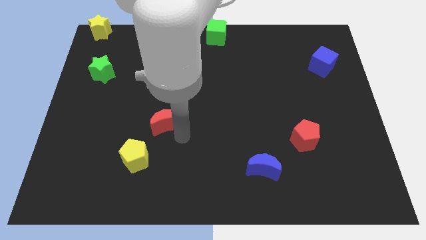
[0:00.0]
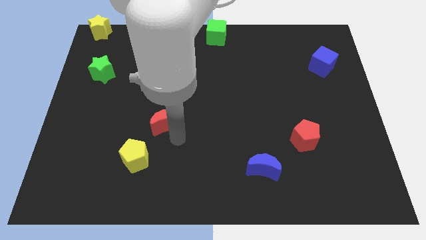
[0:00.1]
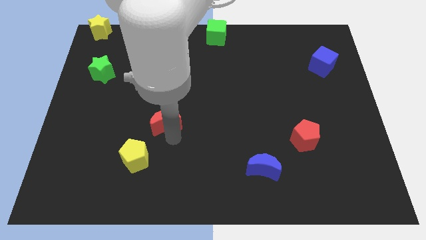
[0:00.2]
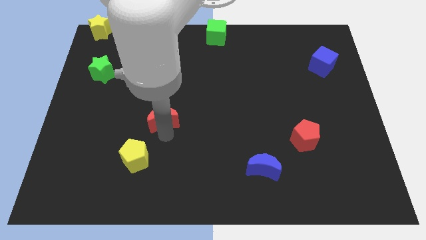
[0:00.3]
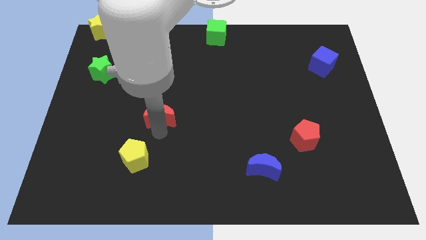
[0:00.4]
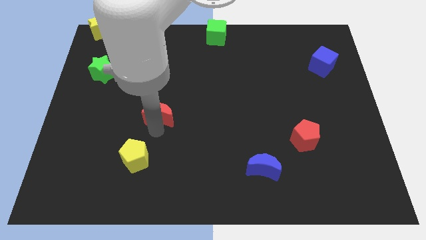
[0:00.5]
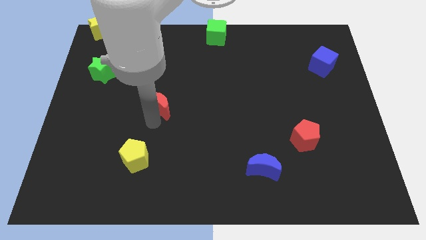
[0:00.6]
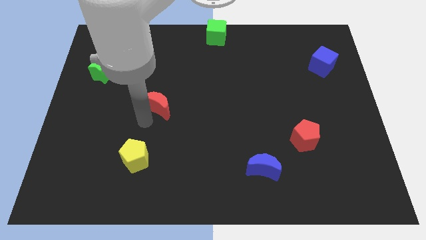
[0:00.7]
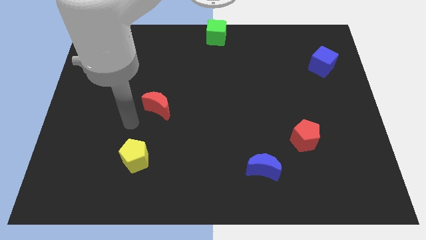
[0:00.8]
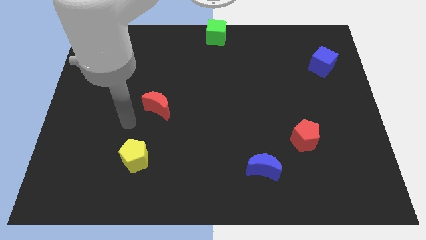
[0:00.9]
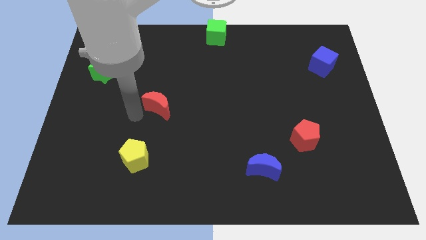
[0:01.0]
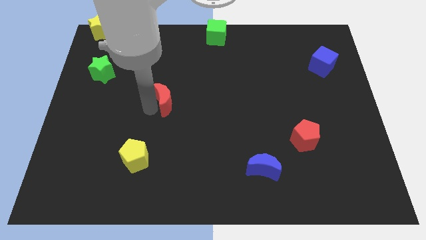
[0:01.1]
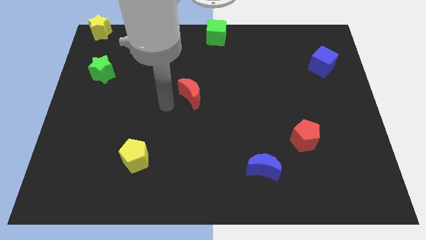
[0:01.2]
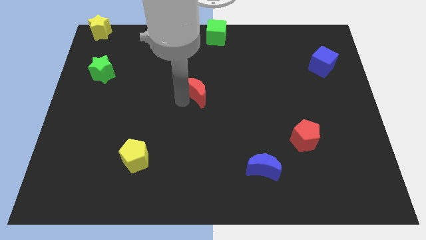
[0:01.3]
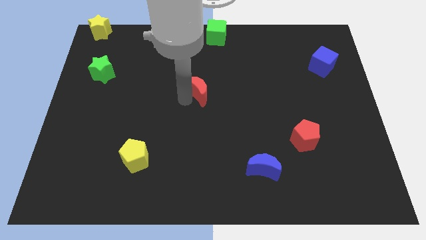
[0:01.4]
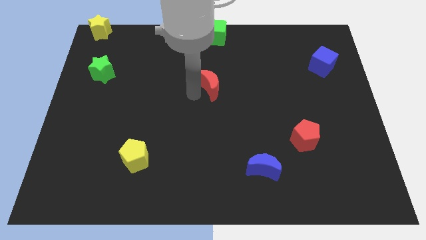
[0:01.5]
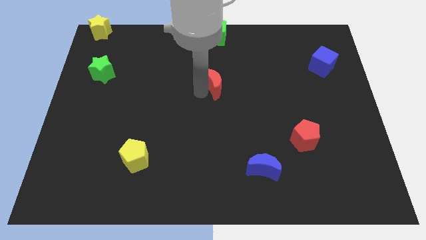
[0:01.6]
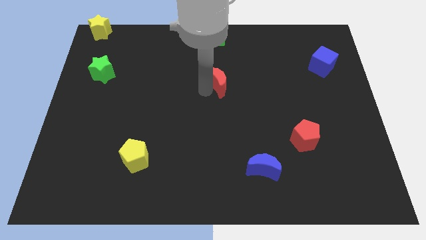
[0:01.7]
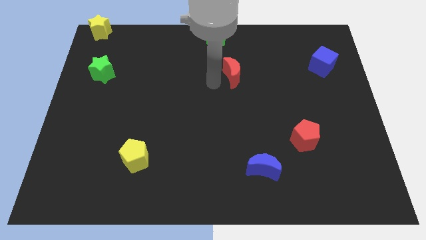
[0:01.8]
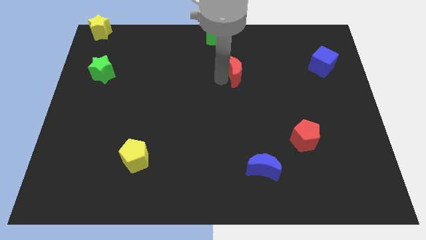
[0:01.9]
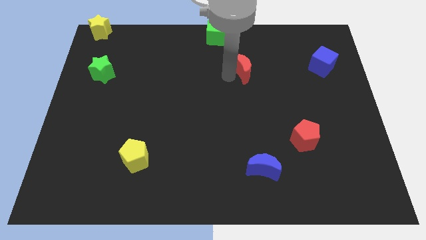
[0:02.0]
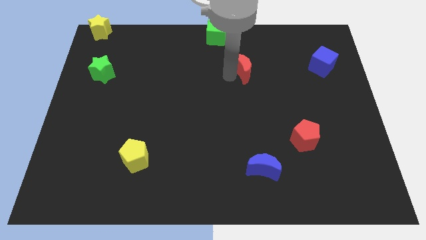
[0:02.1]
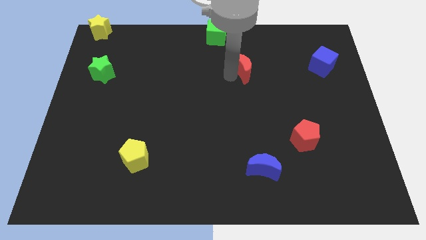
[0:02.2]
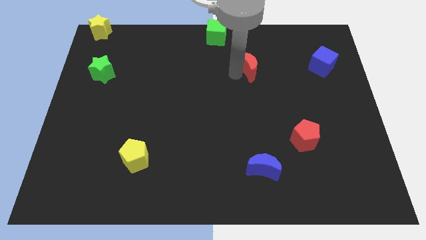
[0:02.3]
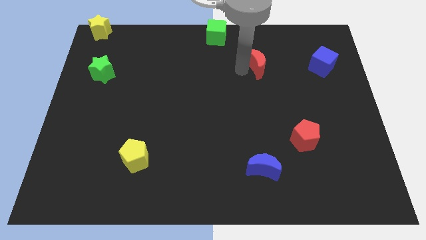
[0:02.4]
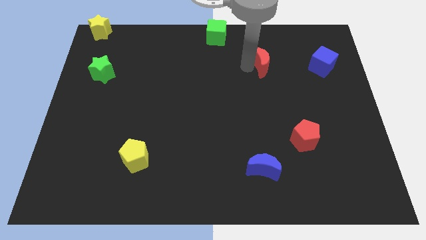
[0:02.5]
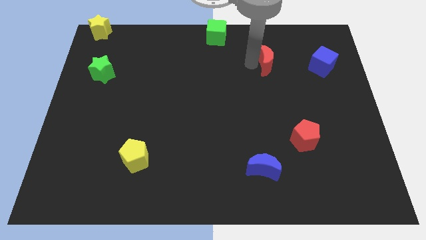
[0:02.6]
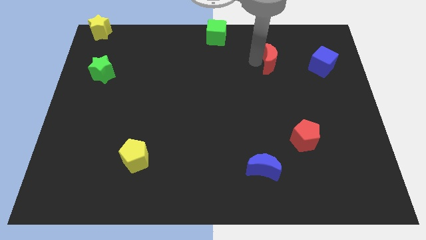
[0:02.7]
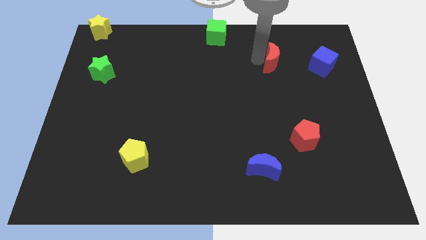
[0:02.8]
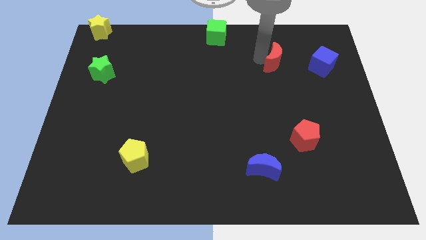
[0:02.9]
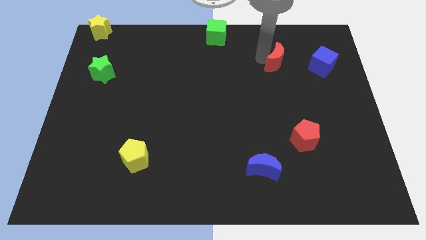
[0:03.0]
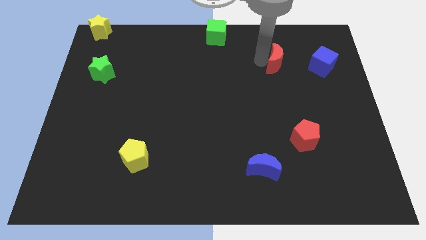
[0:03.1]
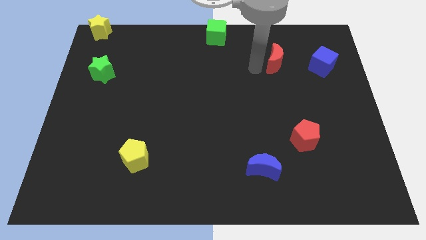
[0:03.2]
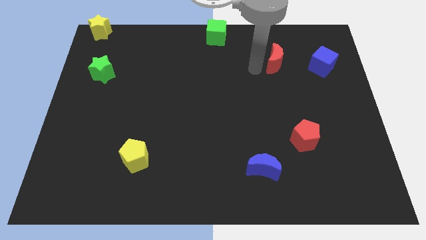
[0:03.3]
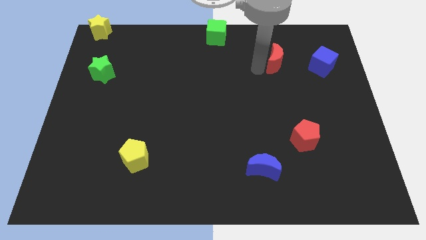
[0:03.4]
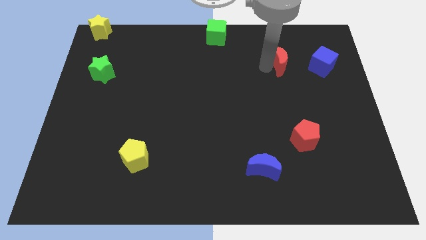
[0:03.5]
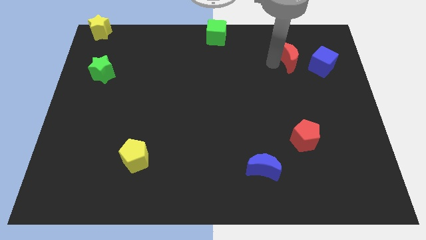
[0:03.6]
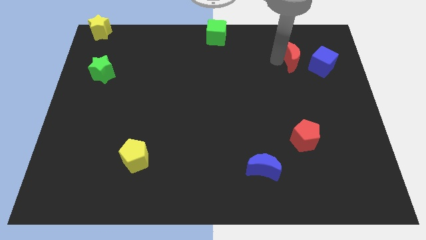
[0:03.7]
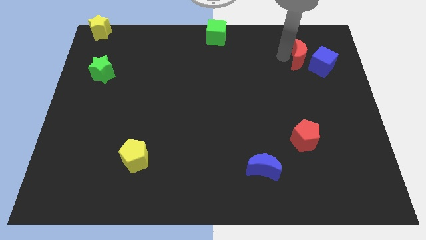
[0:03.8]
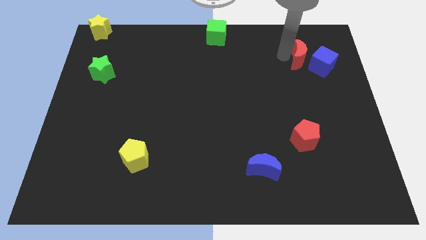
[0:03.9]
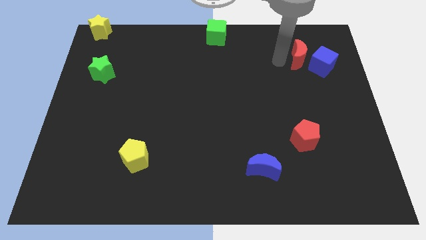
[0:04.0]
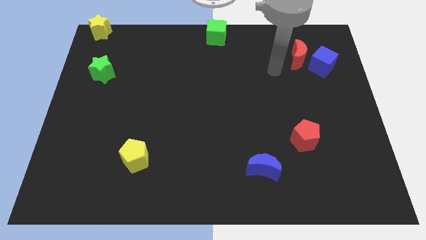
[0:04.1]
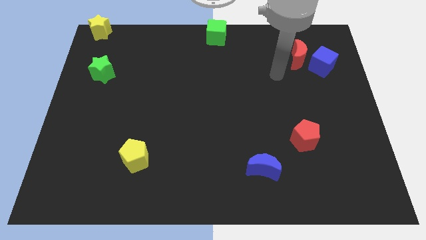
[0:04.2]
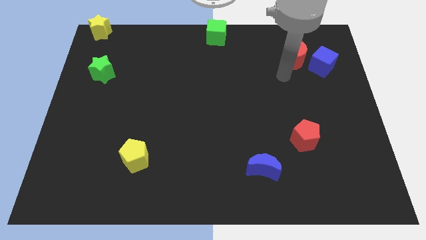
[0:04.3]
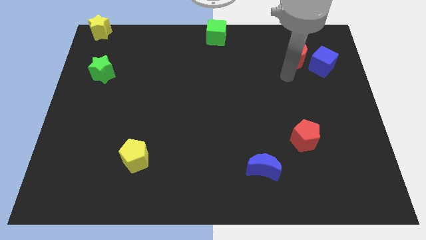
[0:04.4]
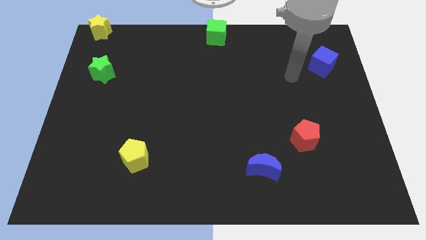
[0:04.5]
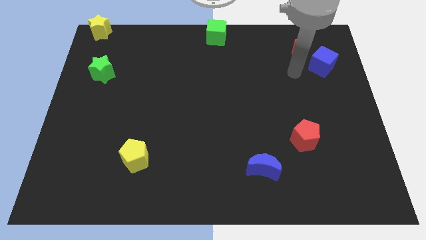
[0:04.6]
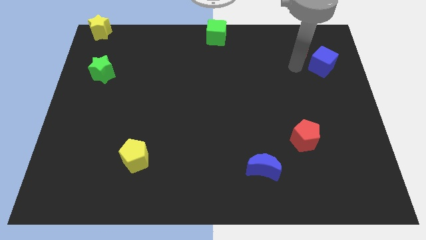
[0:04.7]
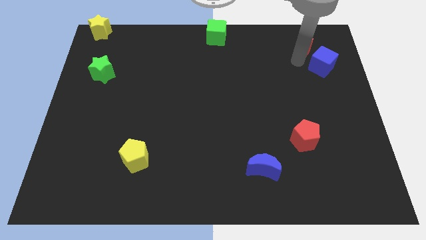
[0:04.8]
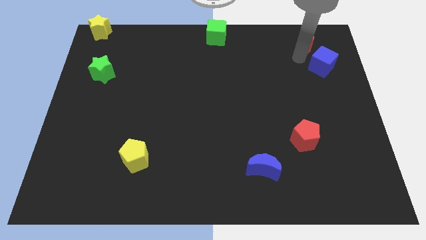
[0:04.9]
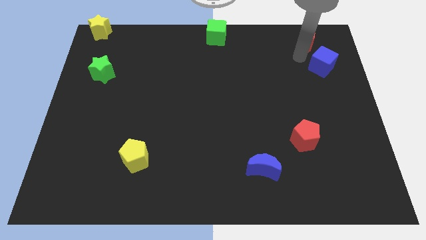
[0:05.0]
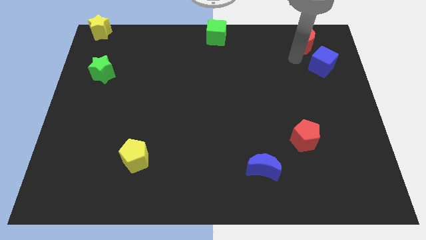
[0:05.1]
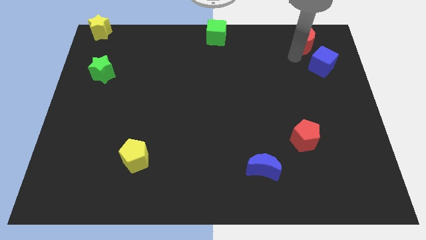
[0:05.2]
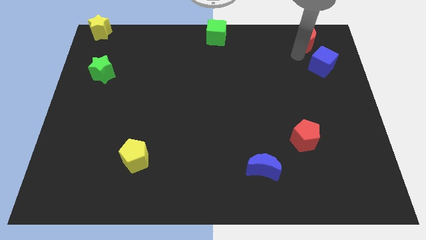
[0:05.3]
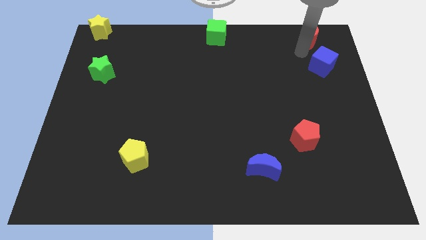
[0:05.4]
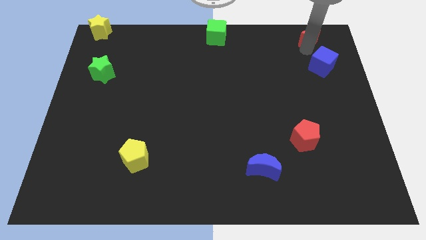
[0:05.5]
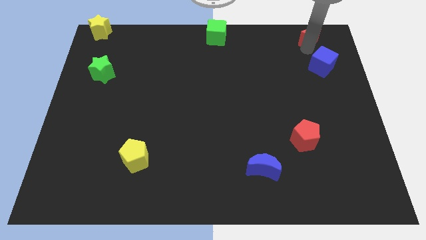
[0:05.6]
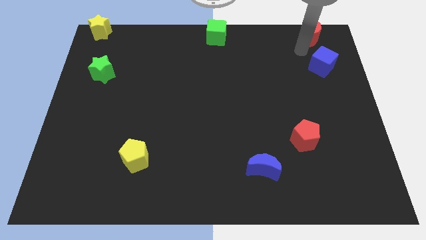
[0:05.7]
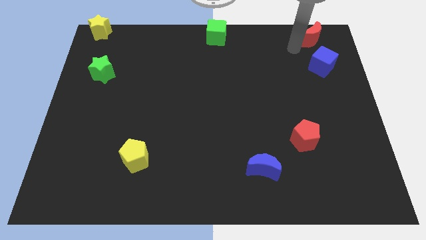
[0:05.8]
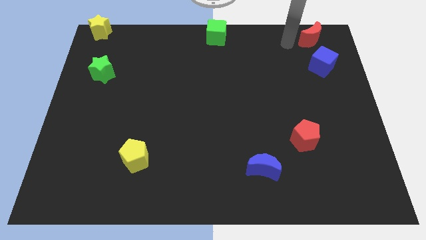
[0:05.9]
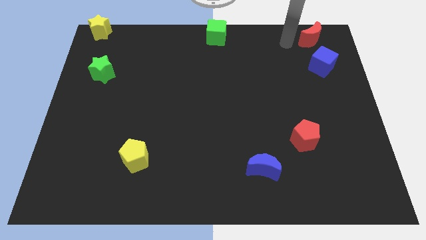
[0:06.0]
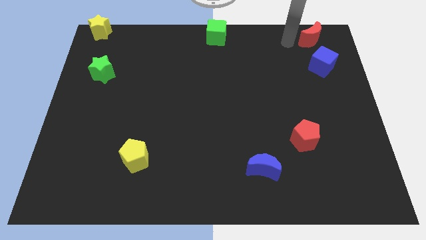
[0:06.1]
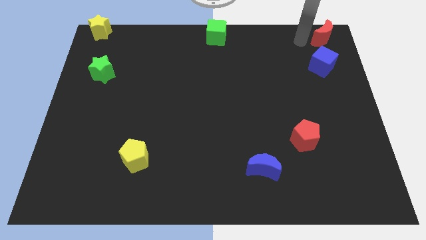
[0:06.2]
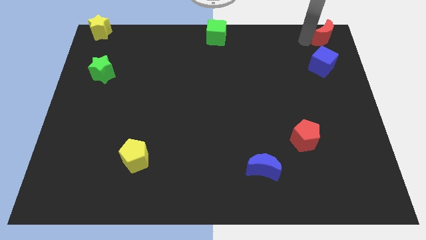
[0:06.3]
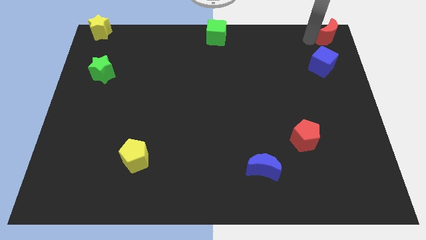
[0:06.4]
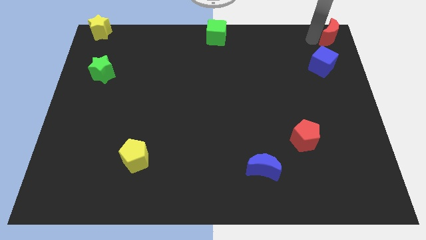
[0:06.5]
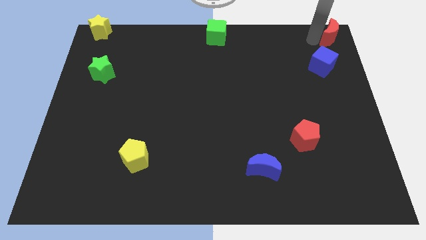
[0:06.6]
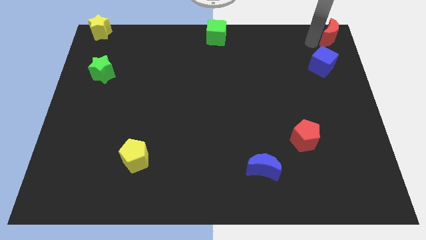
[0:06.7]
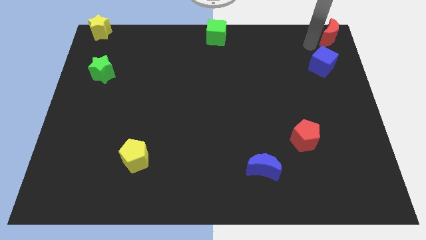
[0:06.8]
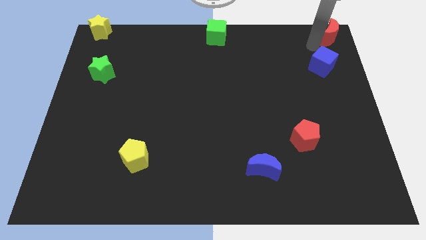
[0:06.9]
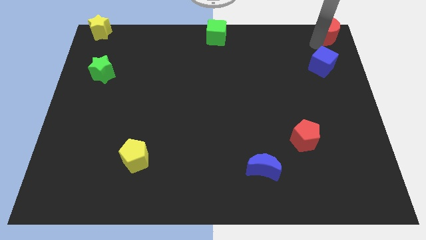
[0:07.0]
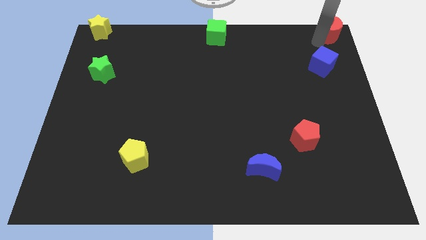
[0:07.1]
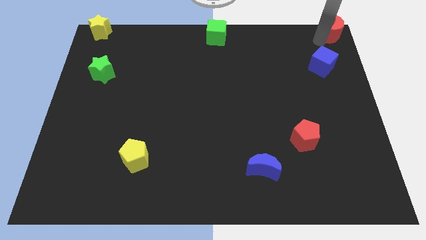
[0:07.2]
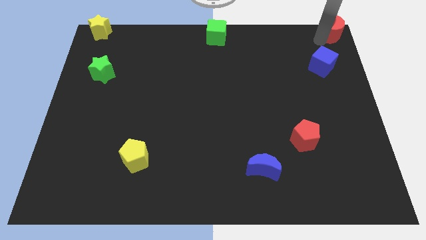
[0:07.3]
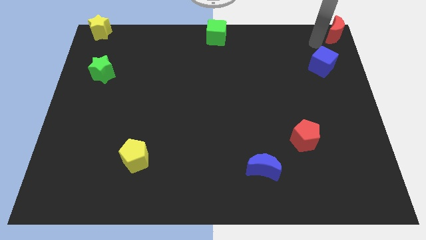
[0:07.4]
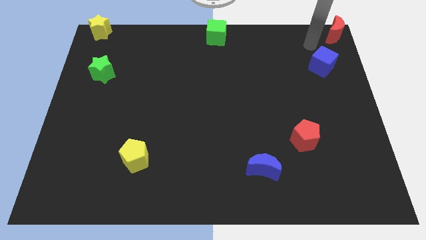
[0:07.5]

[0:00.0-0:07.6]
push the red crescent towards the top right corner of the board

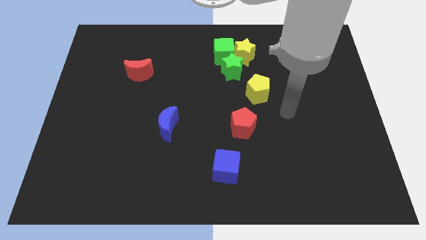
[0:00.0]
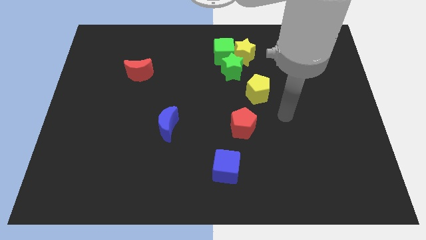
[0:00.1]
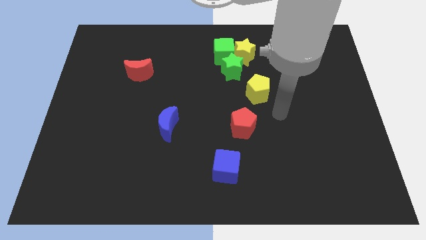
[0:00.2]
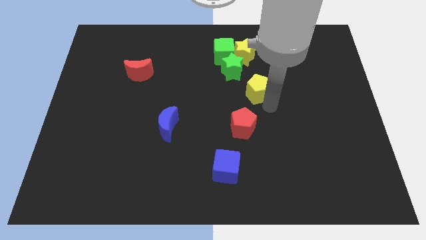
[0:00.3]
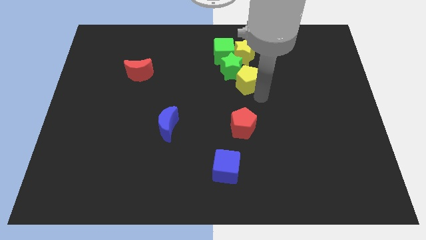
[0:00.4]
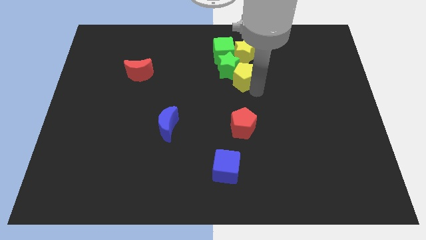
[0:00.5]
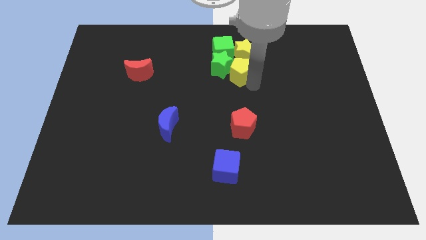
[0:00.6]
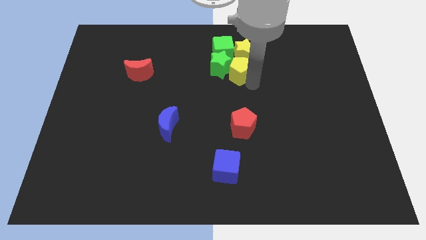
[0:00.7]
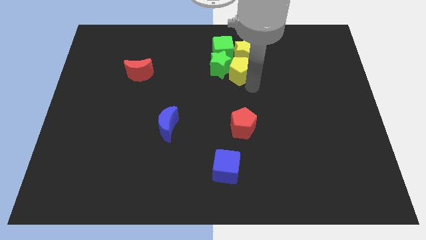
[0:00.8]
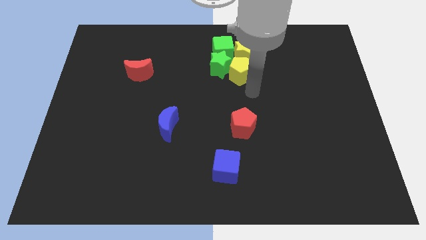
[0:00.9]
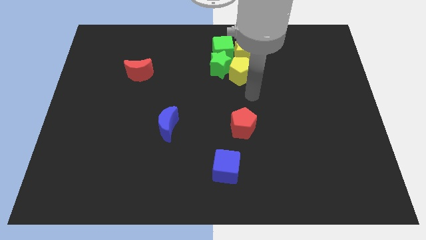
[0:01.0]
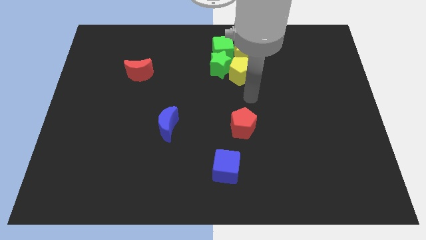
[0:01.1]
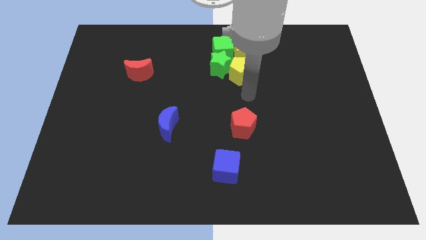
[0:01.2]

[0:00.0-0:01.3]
push the yellow pentagon into the group of blocks
